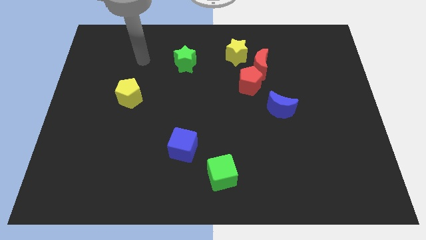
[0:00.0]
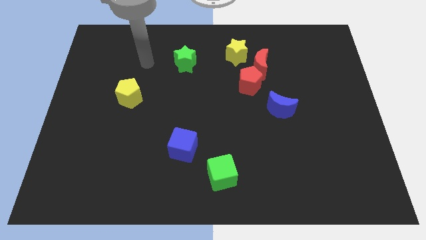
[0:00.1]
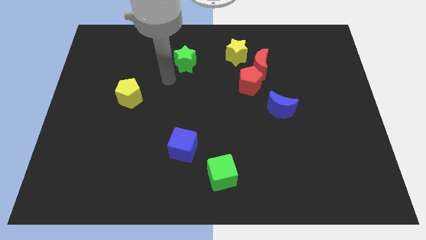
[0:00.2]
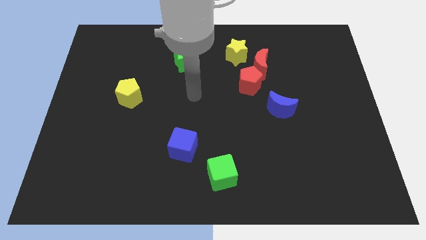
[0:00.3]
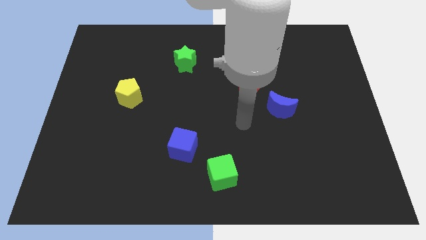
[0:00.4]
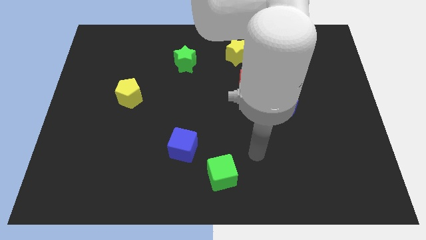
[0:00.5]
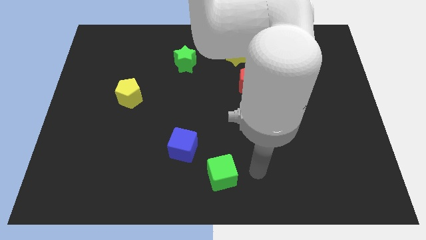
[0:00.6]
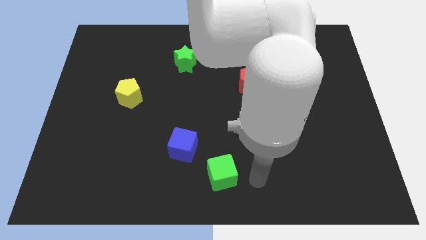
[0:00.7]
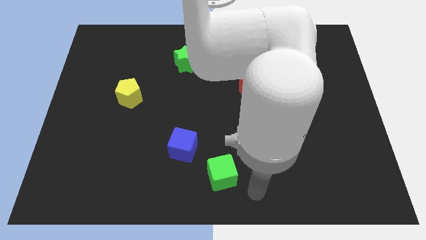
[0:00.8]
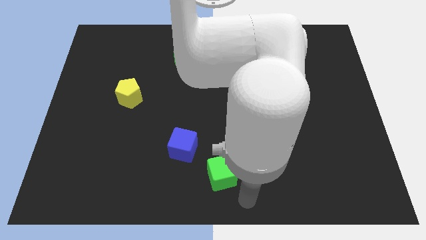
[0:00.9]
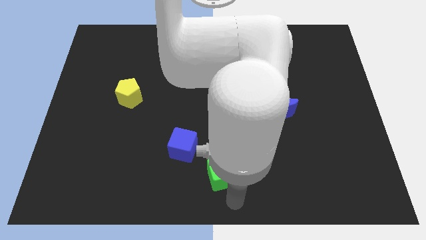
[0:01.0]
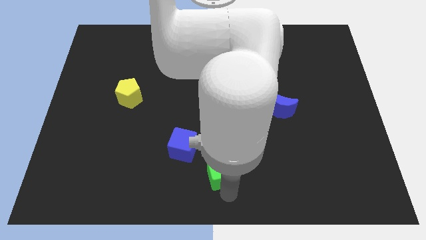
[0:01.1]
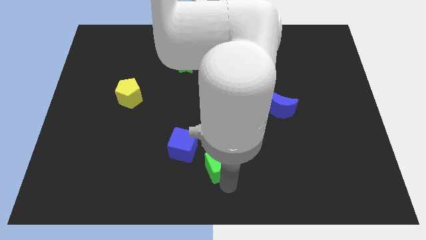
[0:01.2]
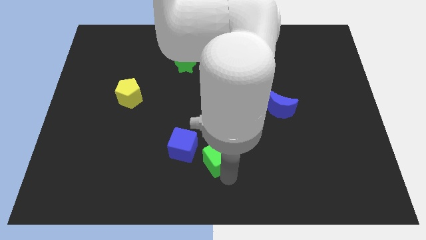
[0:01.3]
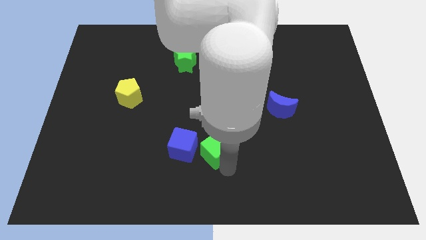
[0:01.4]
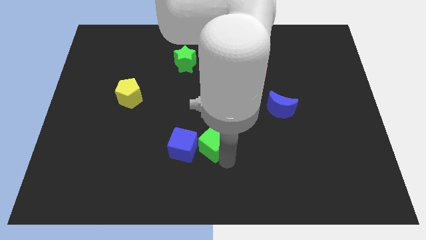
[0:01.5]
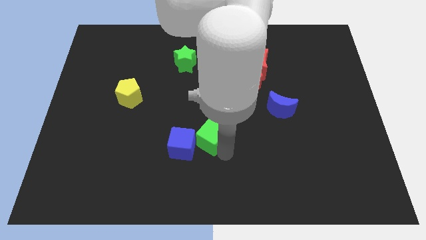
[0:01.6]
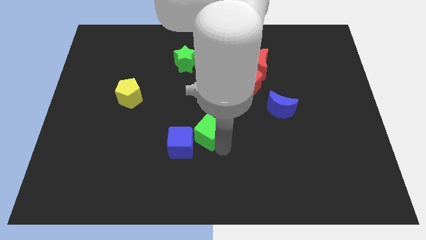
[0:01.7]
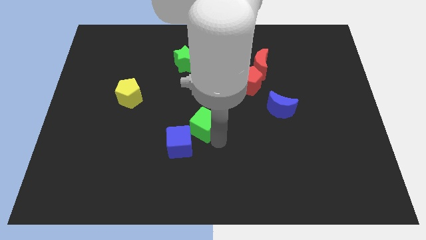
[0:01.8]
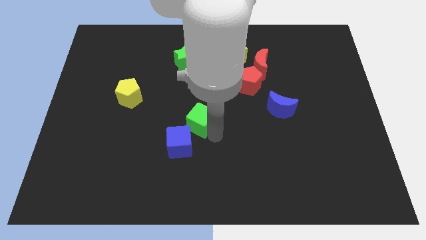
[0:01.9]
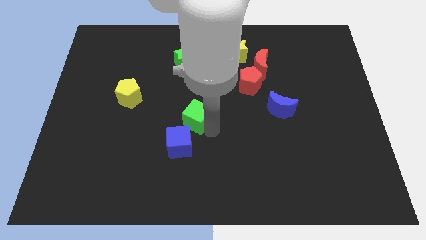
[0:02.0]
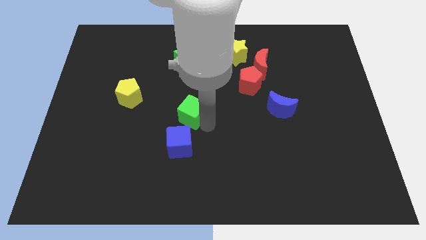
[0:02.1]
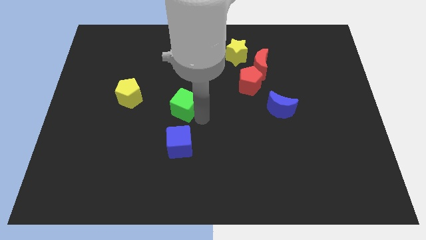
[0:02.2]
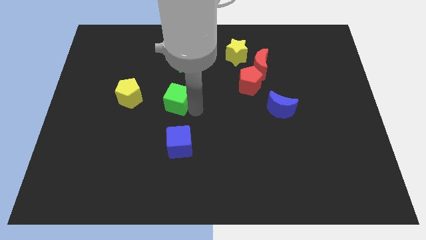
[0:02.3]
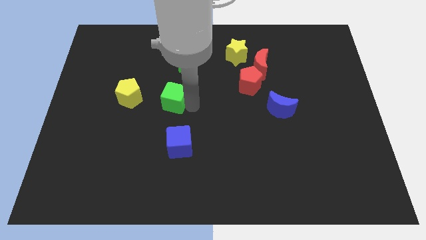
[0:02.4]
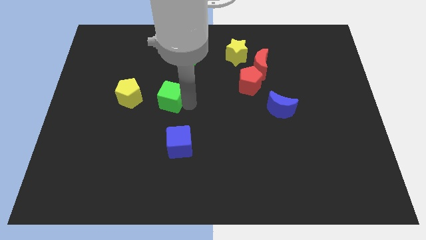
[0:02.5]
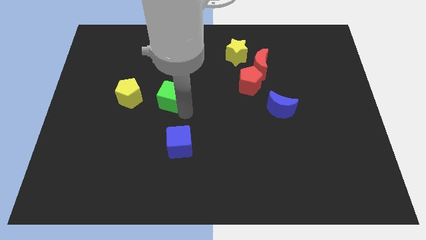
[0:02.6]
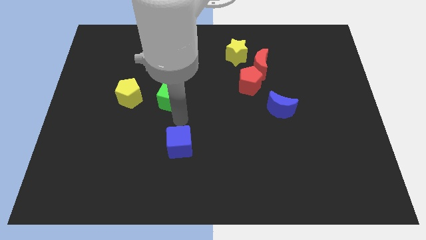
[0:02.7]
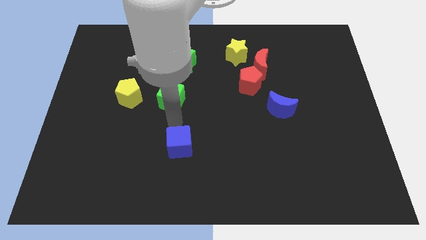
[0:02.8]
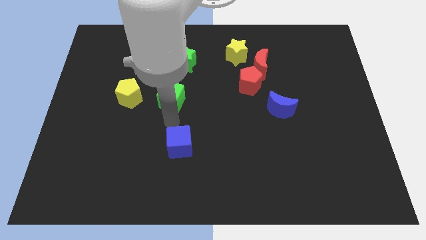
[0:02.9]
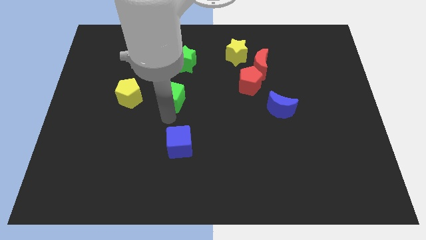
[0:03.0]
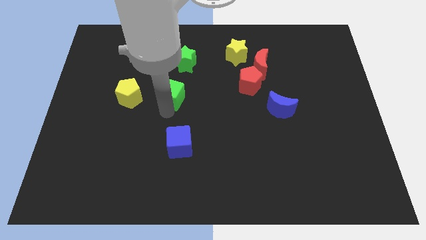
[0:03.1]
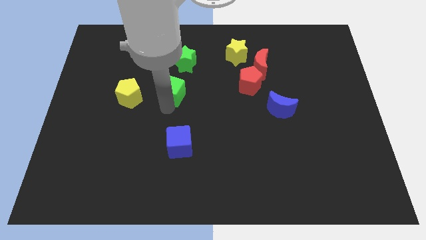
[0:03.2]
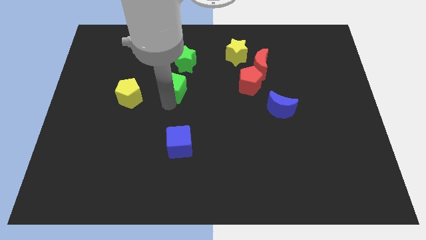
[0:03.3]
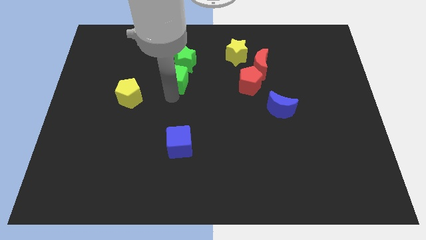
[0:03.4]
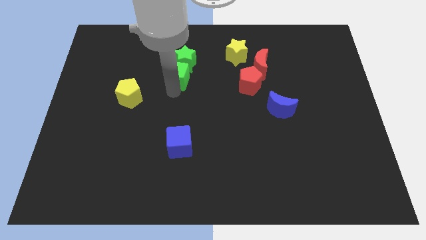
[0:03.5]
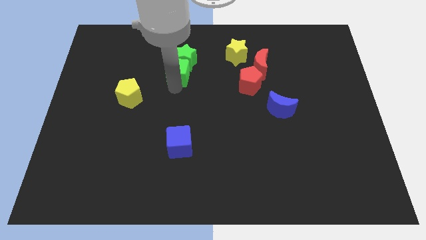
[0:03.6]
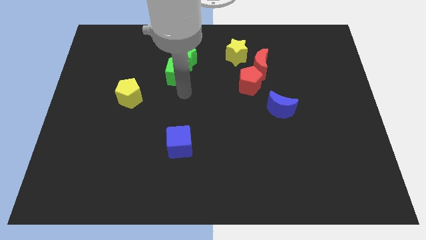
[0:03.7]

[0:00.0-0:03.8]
put the green cube next to the green star

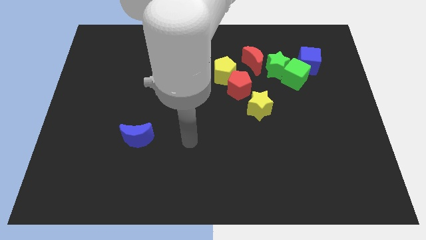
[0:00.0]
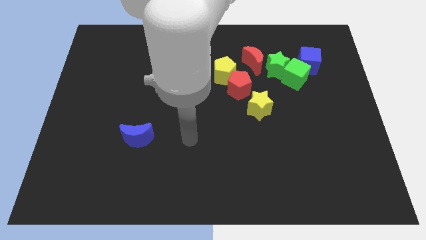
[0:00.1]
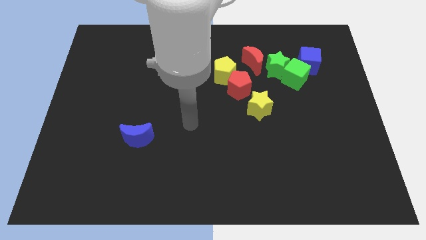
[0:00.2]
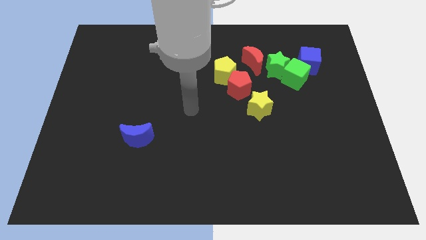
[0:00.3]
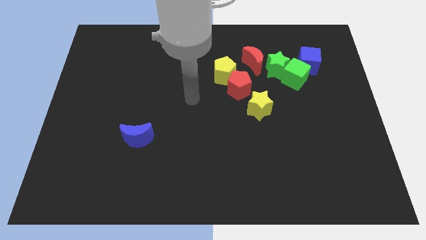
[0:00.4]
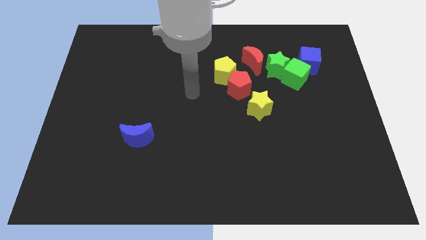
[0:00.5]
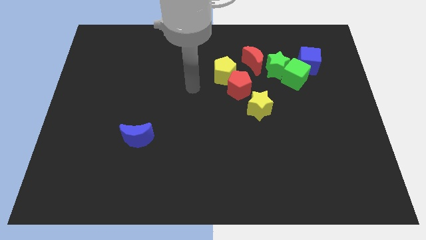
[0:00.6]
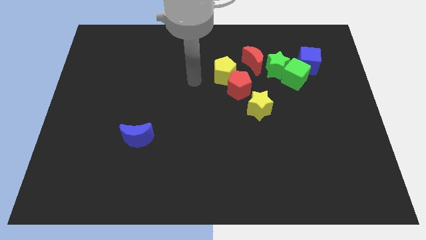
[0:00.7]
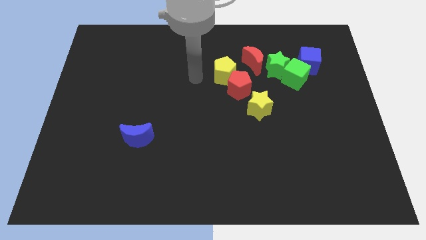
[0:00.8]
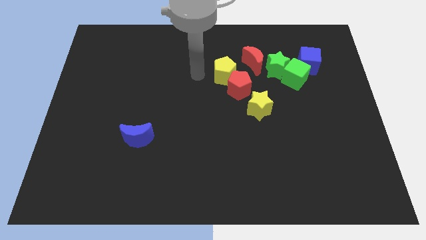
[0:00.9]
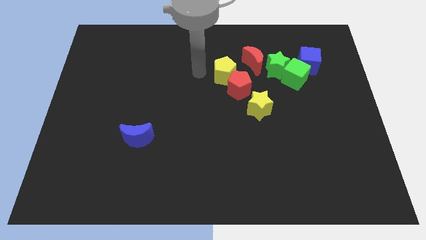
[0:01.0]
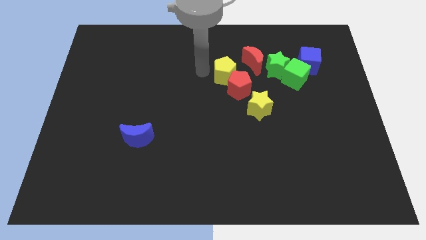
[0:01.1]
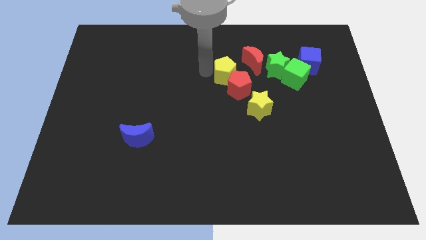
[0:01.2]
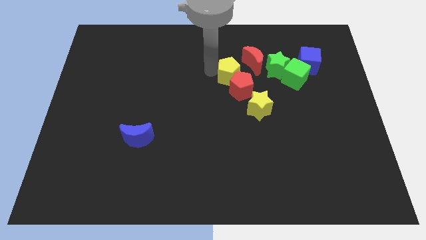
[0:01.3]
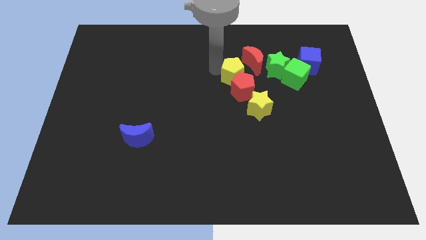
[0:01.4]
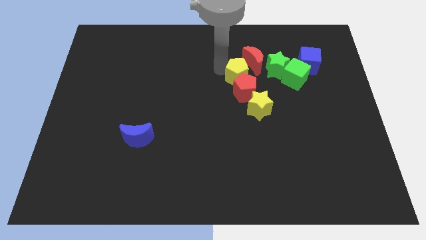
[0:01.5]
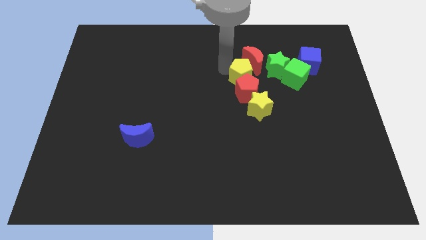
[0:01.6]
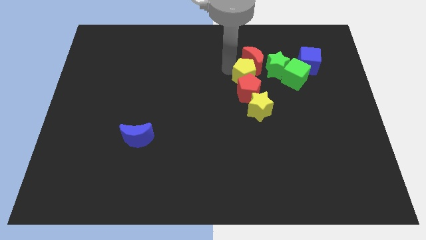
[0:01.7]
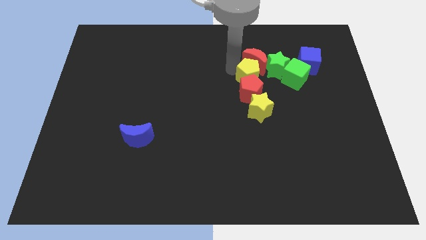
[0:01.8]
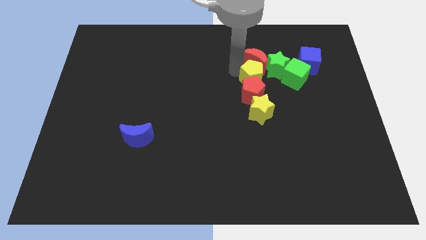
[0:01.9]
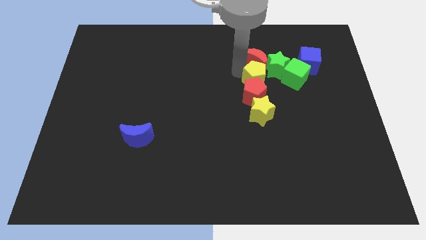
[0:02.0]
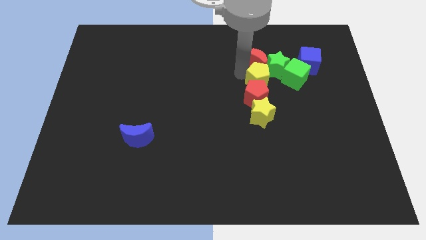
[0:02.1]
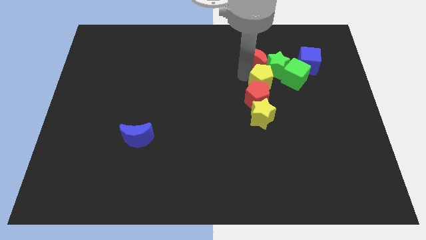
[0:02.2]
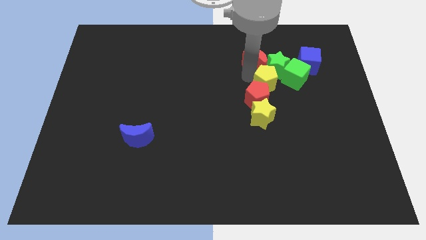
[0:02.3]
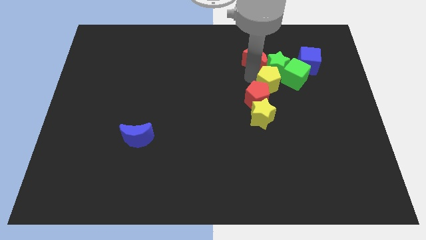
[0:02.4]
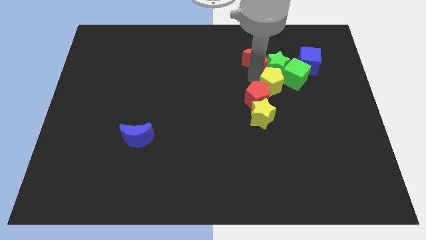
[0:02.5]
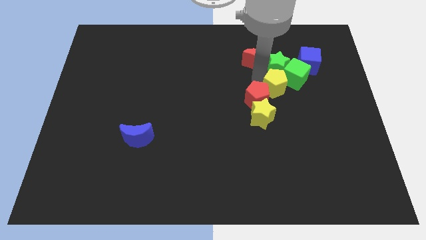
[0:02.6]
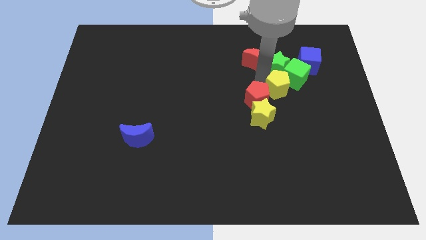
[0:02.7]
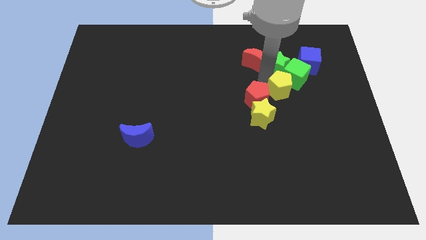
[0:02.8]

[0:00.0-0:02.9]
push the yellow pentagon next to the green cube

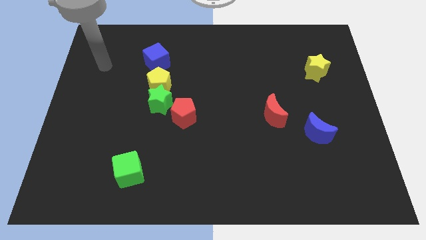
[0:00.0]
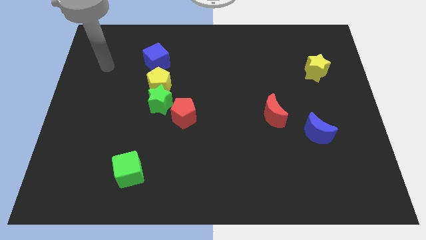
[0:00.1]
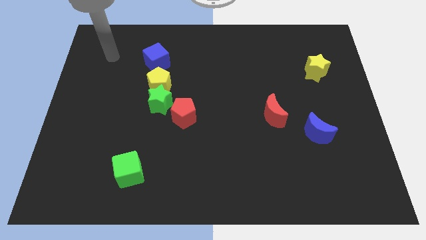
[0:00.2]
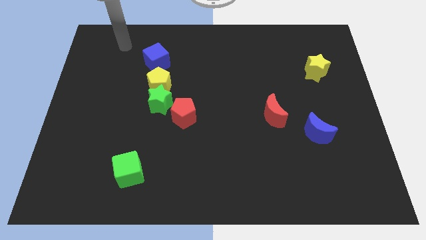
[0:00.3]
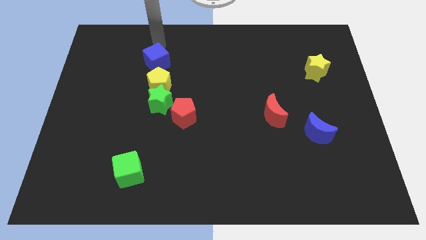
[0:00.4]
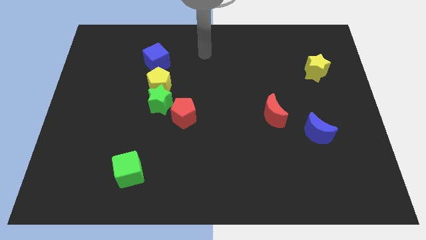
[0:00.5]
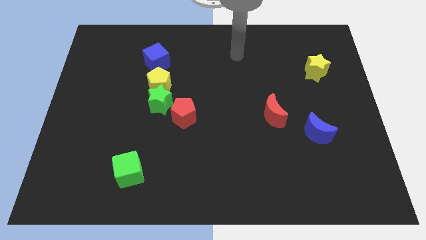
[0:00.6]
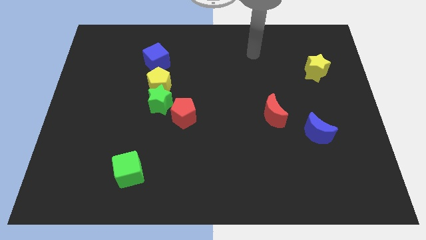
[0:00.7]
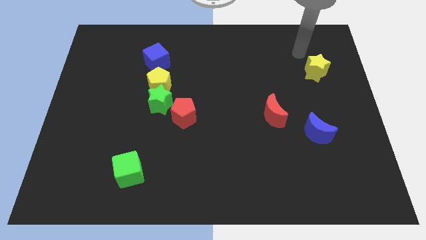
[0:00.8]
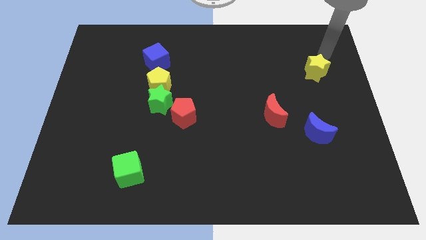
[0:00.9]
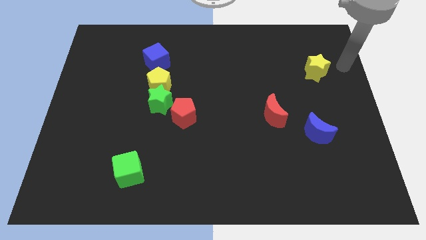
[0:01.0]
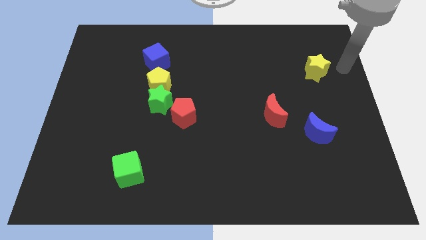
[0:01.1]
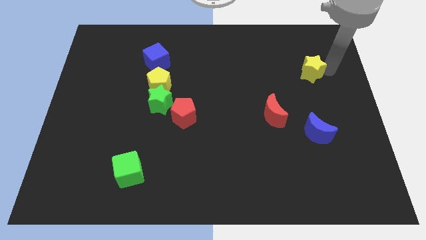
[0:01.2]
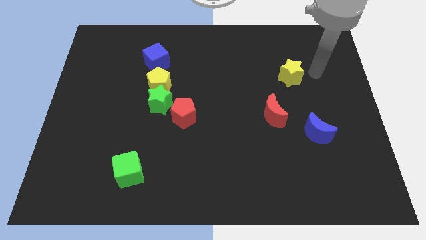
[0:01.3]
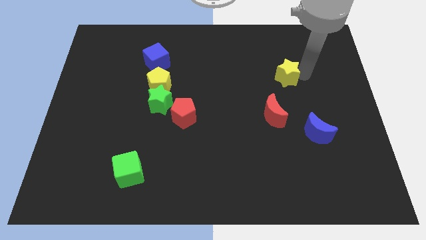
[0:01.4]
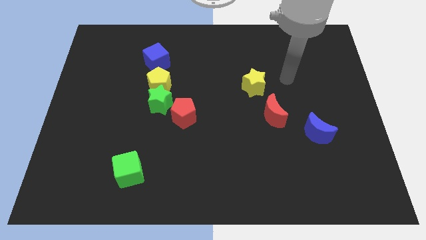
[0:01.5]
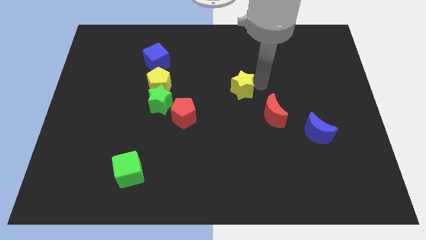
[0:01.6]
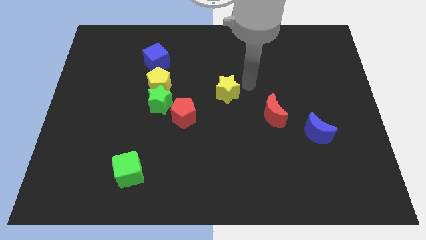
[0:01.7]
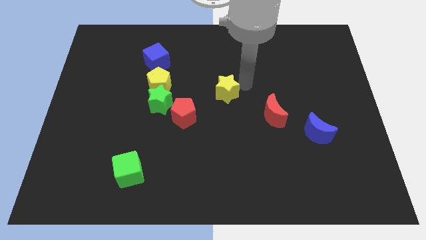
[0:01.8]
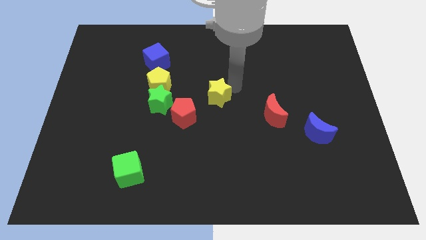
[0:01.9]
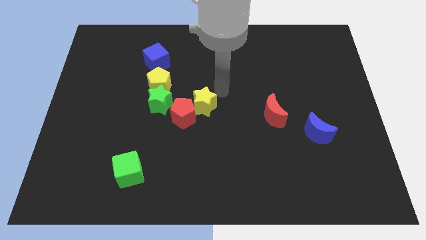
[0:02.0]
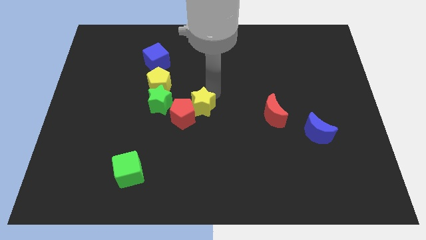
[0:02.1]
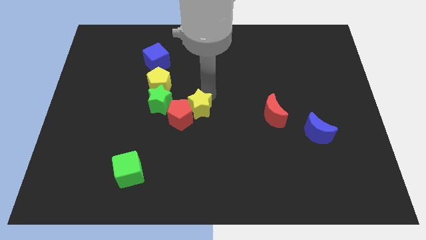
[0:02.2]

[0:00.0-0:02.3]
push the yellow star close to the red pentagon
